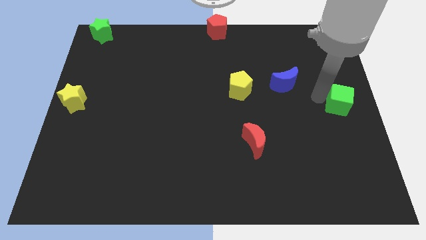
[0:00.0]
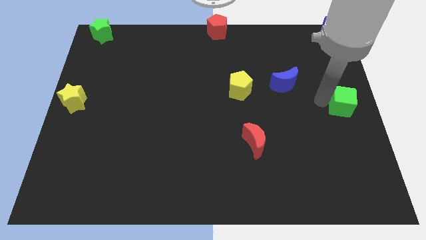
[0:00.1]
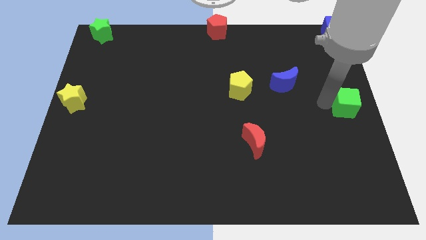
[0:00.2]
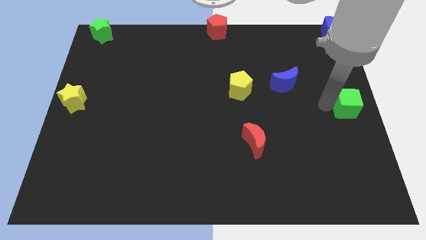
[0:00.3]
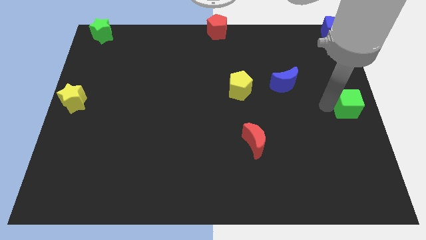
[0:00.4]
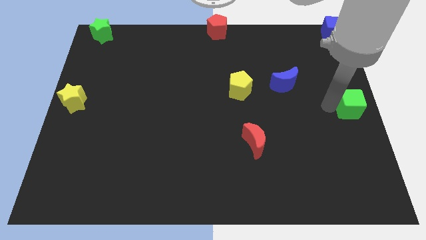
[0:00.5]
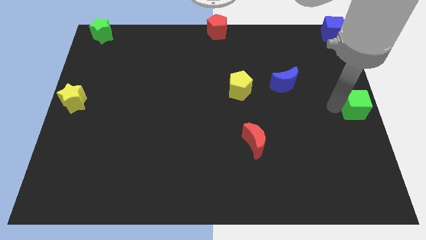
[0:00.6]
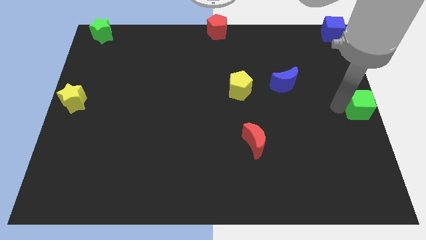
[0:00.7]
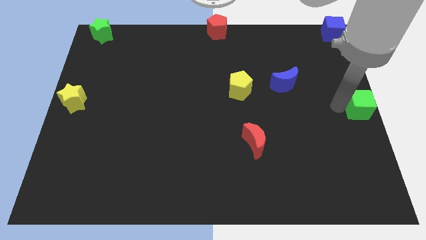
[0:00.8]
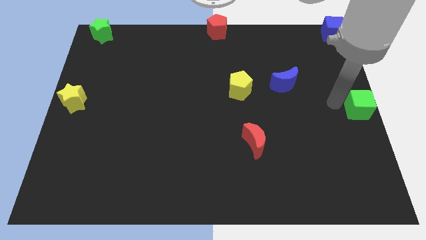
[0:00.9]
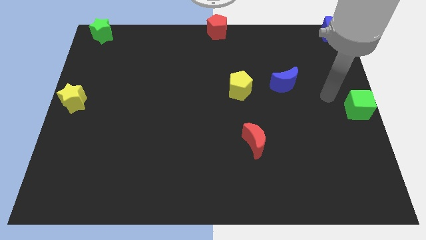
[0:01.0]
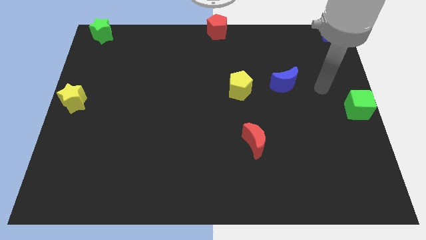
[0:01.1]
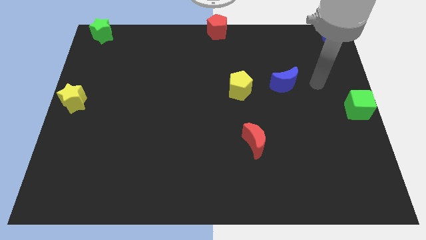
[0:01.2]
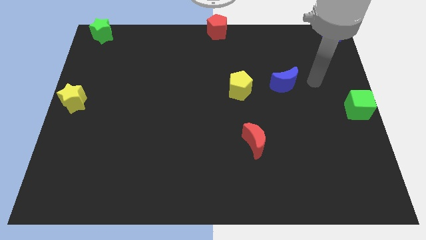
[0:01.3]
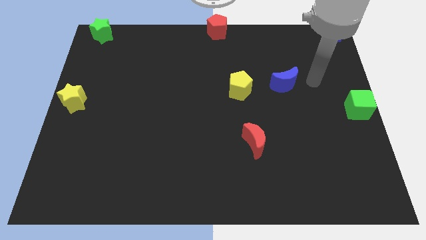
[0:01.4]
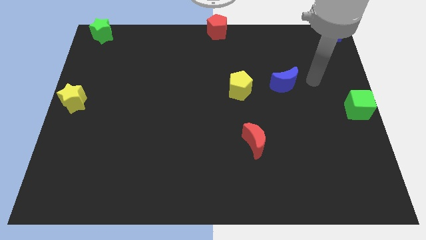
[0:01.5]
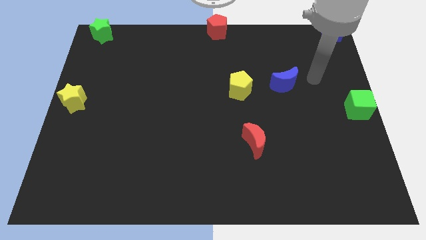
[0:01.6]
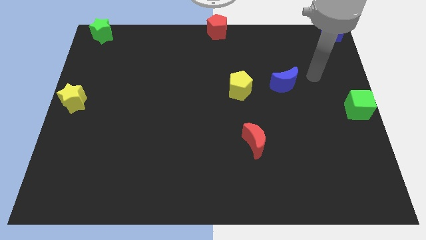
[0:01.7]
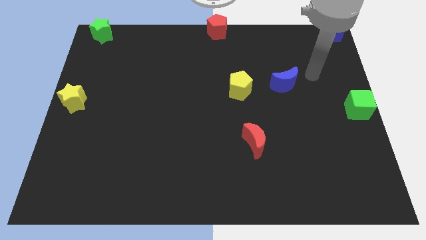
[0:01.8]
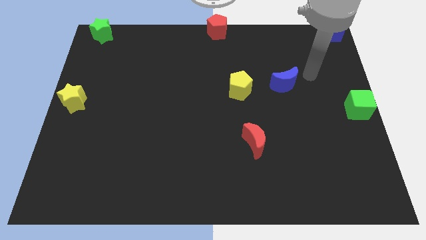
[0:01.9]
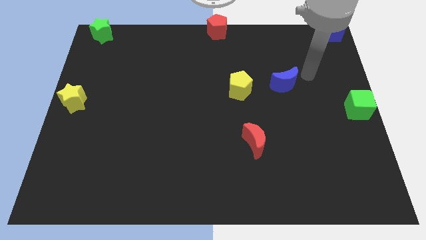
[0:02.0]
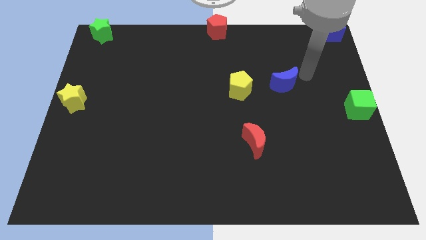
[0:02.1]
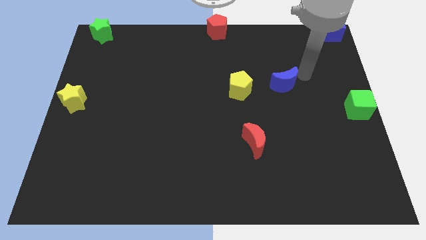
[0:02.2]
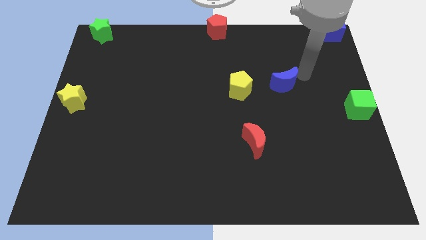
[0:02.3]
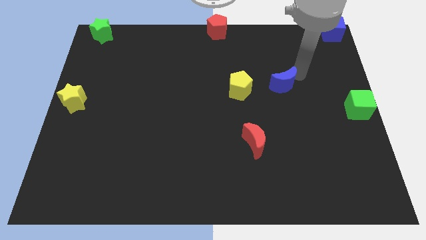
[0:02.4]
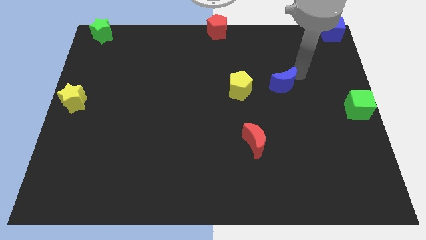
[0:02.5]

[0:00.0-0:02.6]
slide green cube to the center right of the board

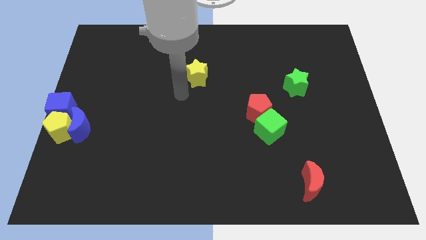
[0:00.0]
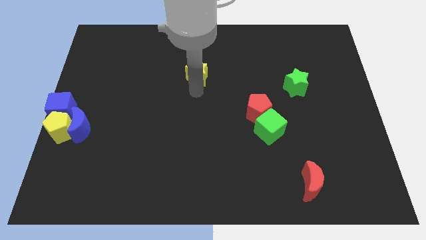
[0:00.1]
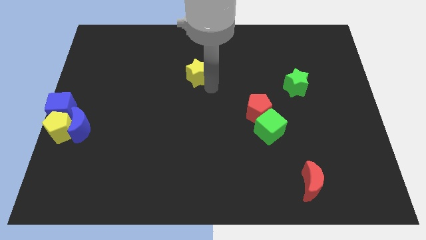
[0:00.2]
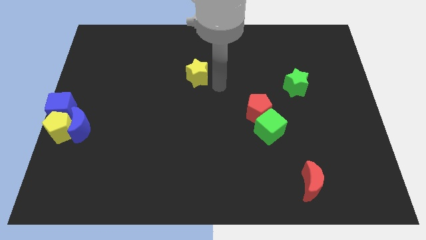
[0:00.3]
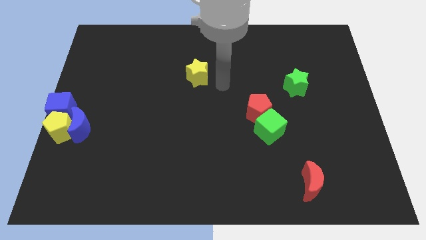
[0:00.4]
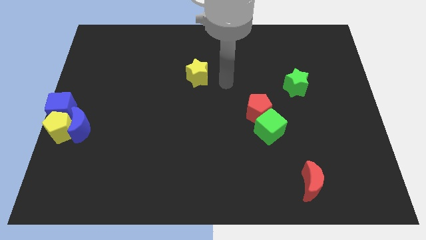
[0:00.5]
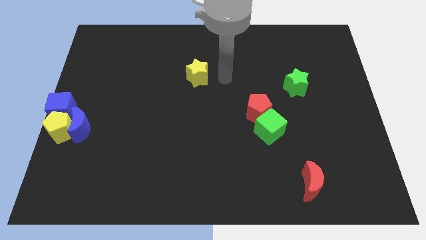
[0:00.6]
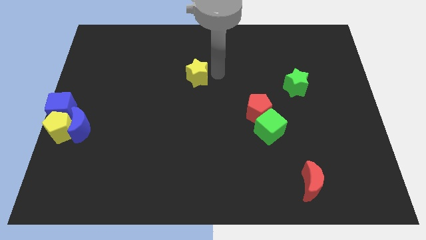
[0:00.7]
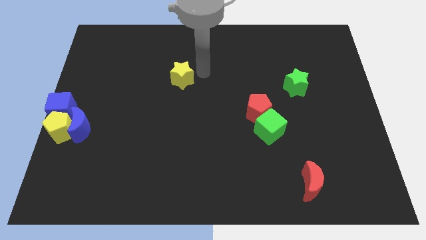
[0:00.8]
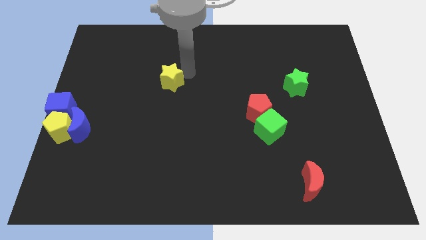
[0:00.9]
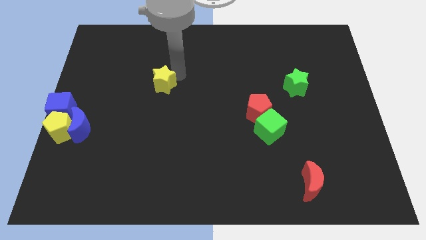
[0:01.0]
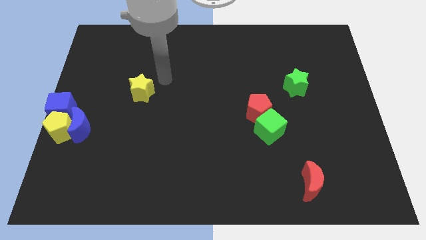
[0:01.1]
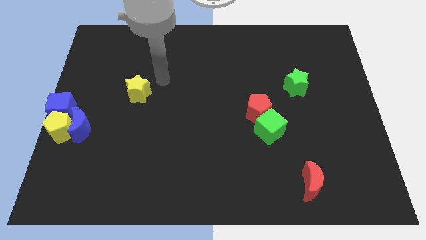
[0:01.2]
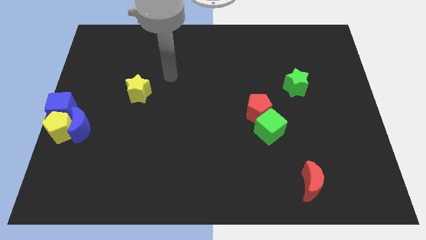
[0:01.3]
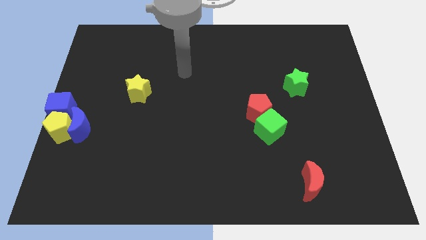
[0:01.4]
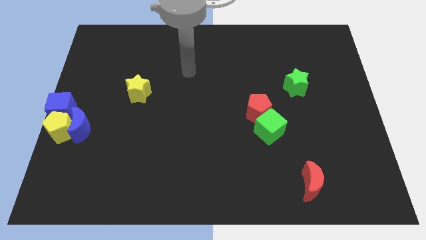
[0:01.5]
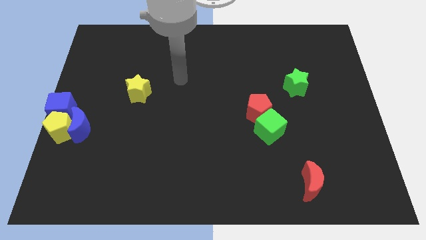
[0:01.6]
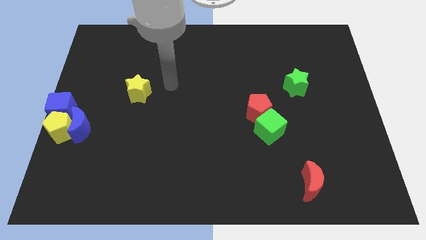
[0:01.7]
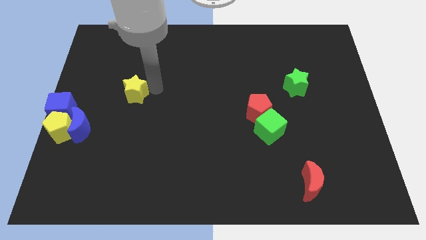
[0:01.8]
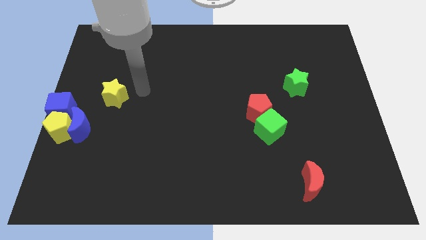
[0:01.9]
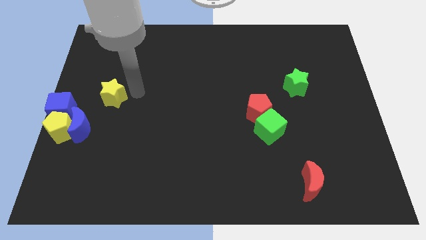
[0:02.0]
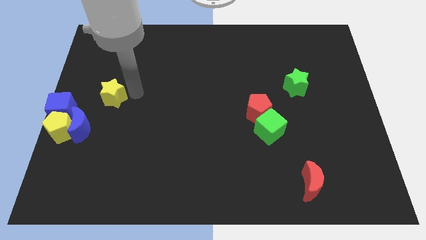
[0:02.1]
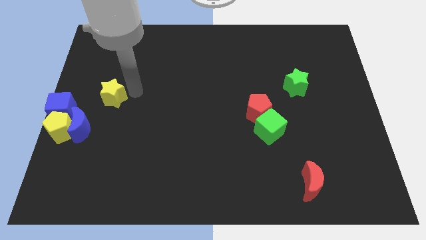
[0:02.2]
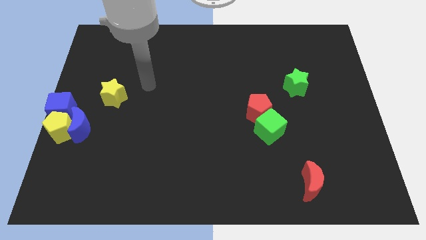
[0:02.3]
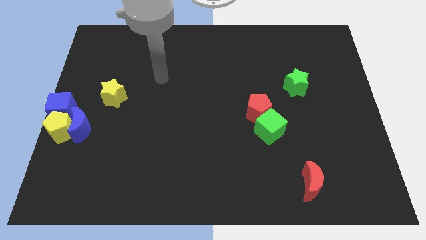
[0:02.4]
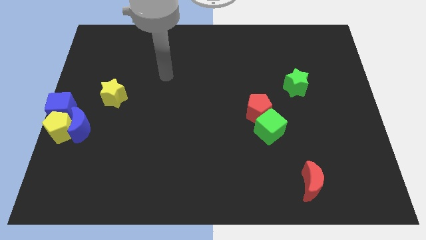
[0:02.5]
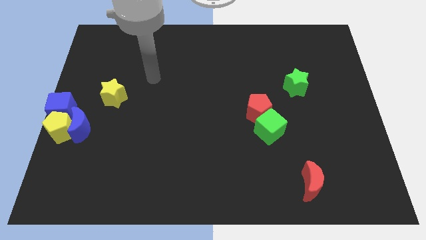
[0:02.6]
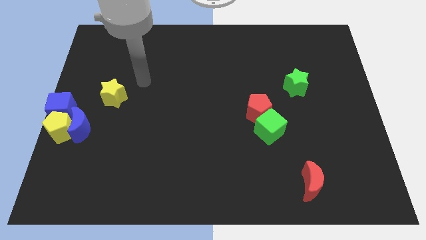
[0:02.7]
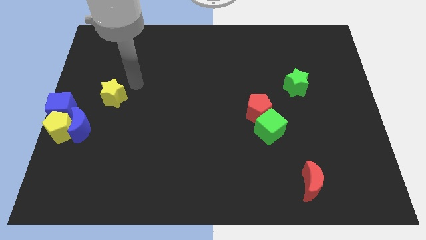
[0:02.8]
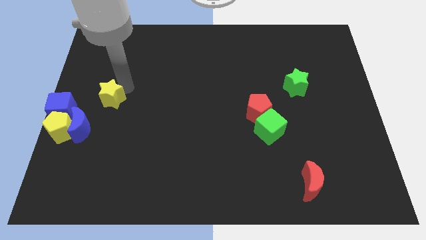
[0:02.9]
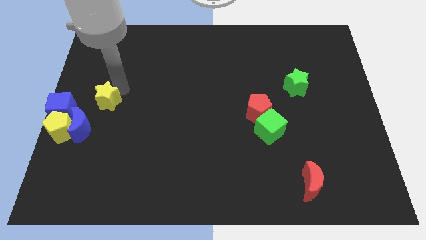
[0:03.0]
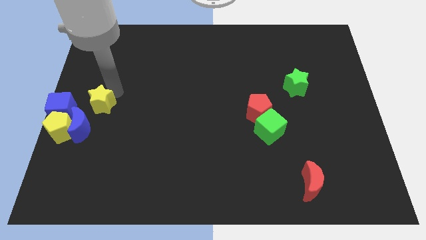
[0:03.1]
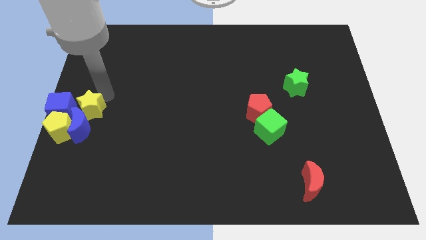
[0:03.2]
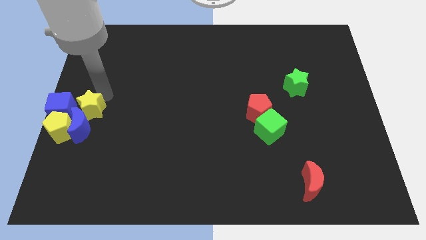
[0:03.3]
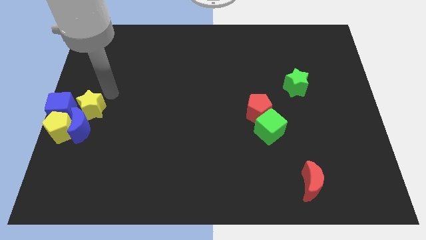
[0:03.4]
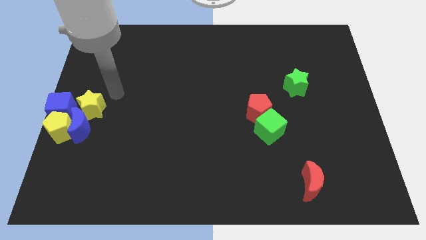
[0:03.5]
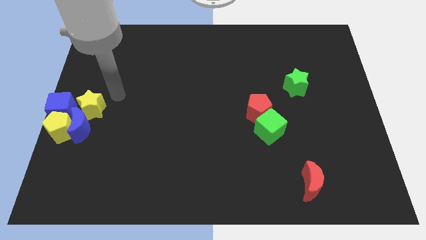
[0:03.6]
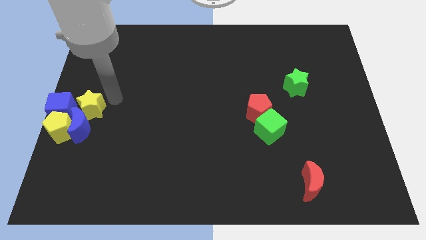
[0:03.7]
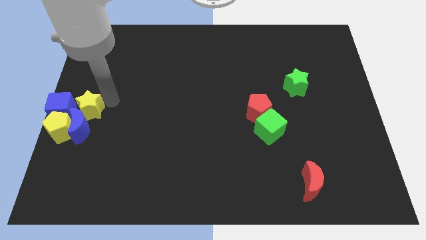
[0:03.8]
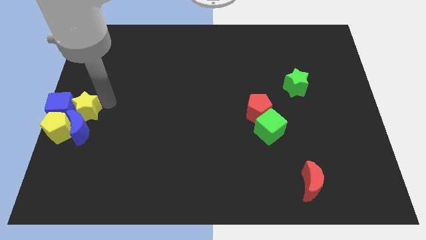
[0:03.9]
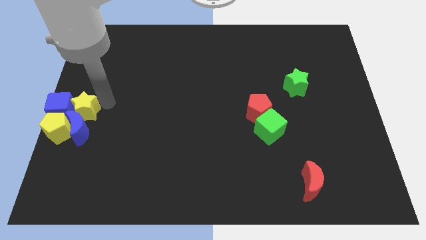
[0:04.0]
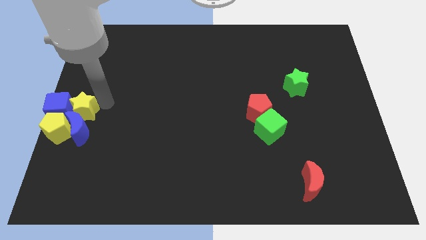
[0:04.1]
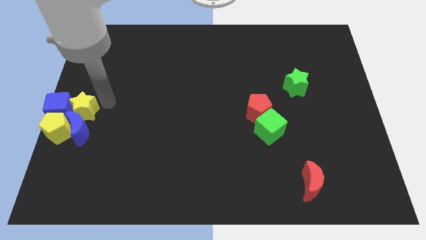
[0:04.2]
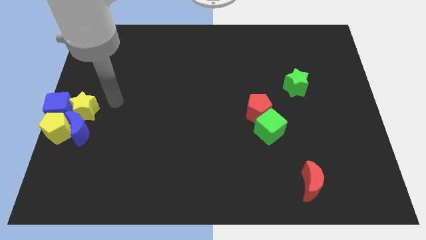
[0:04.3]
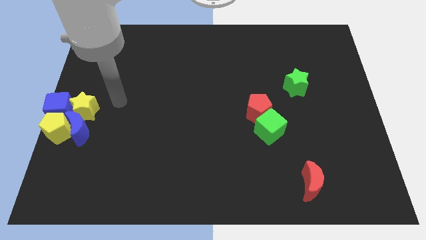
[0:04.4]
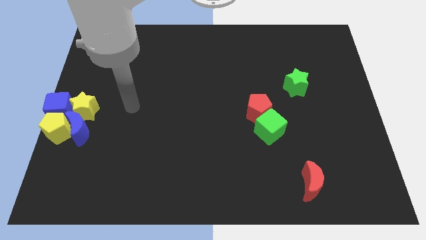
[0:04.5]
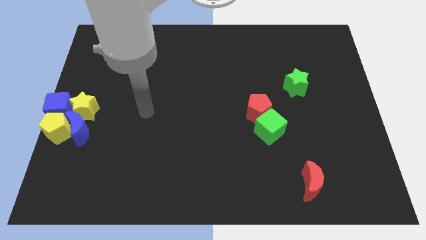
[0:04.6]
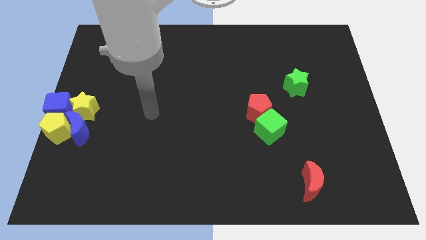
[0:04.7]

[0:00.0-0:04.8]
put the yellow star on the right side of the blue cube

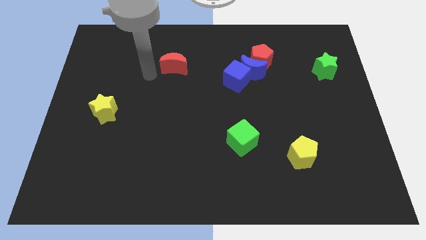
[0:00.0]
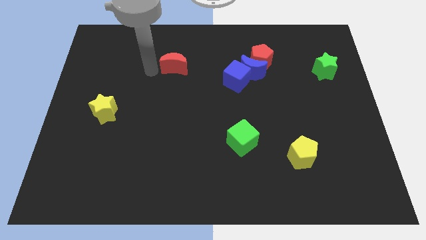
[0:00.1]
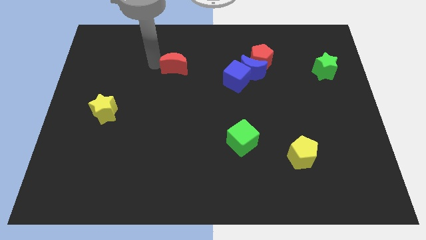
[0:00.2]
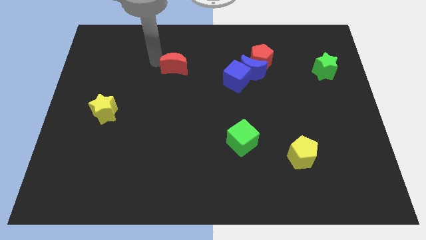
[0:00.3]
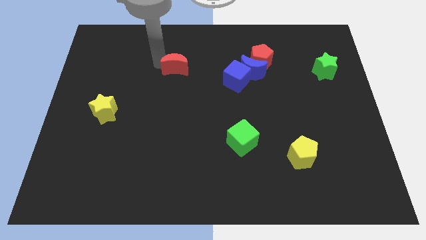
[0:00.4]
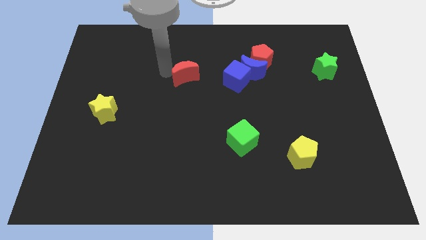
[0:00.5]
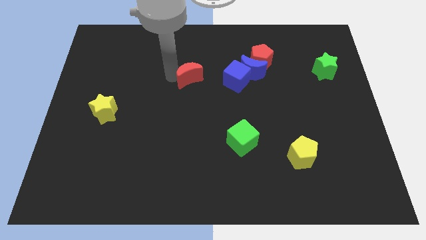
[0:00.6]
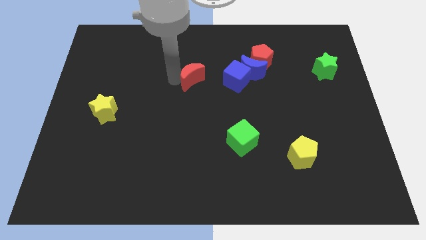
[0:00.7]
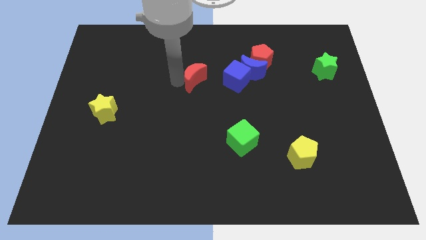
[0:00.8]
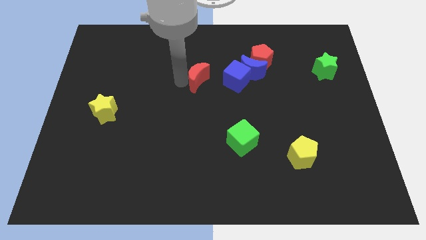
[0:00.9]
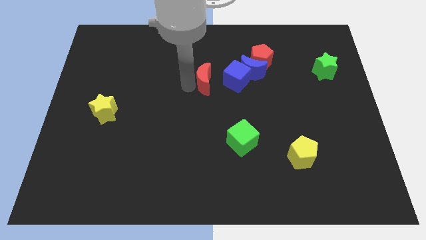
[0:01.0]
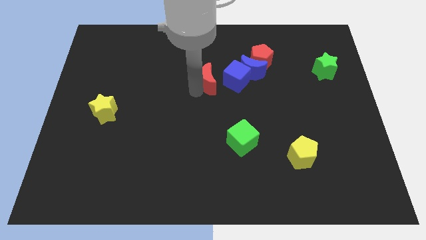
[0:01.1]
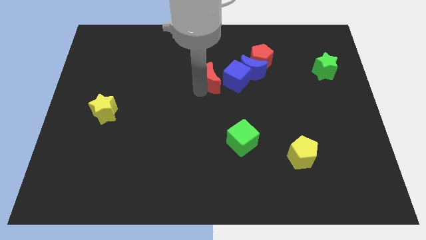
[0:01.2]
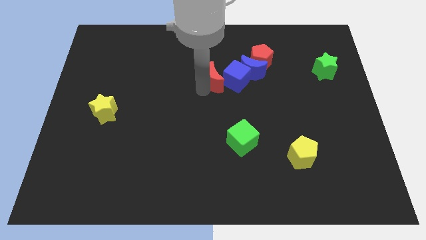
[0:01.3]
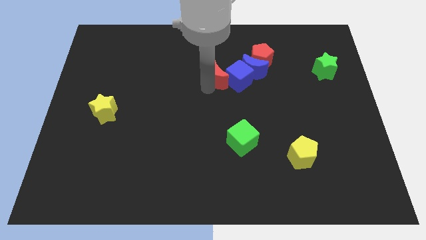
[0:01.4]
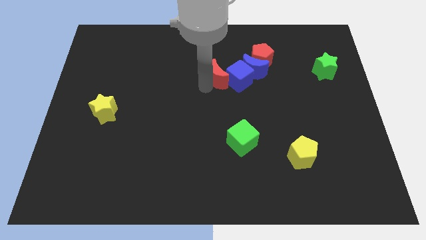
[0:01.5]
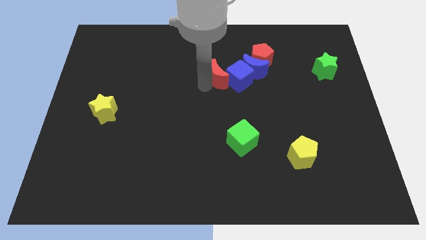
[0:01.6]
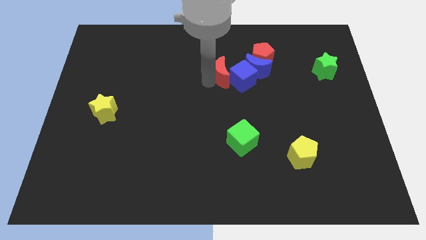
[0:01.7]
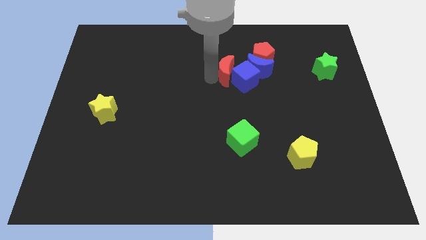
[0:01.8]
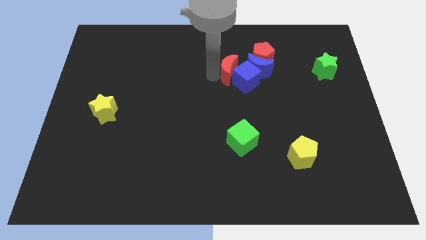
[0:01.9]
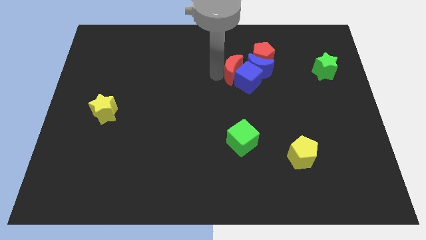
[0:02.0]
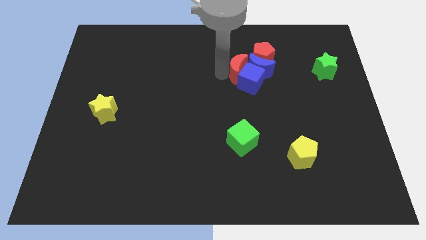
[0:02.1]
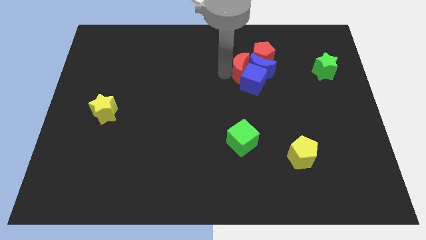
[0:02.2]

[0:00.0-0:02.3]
move the red crescent towards the left side of the blue cube
